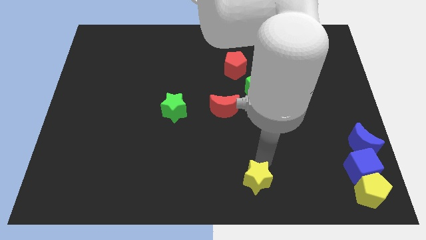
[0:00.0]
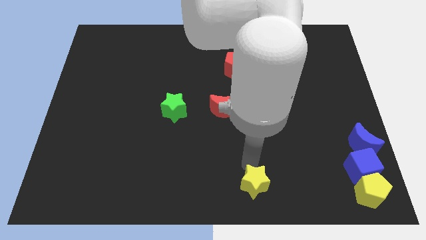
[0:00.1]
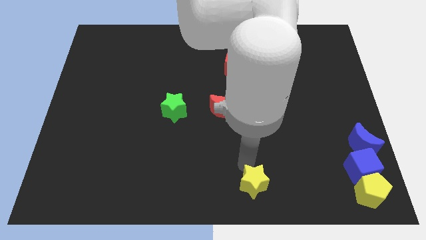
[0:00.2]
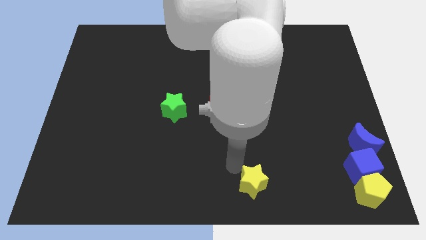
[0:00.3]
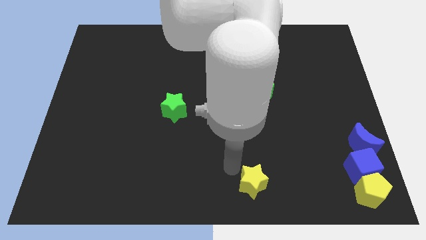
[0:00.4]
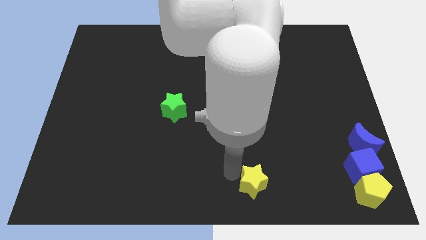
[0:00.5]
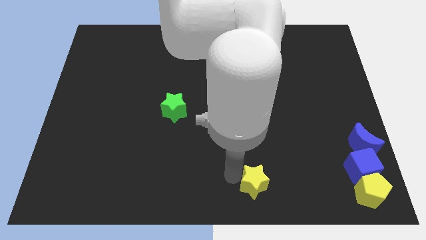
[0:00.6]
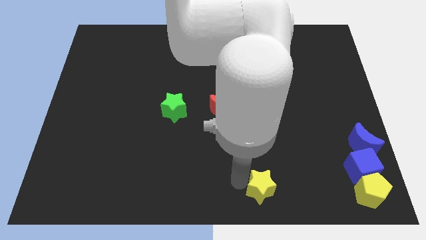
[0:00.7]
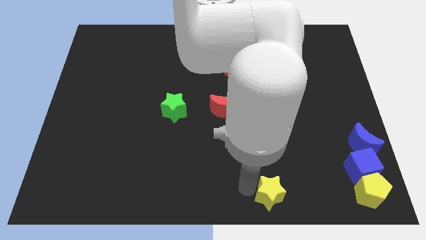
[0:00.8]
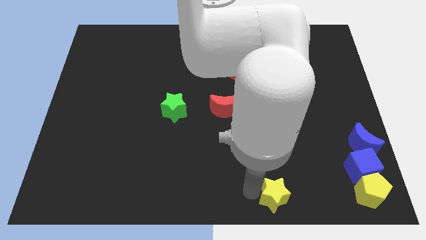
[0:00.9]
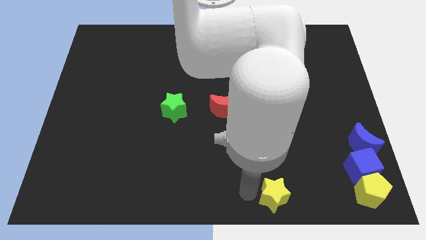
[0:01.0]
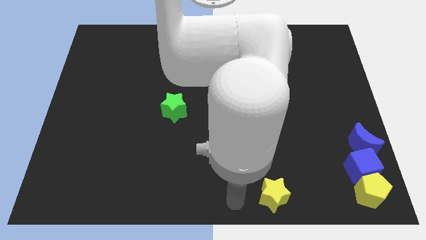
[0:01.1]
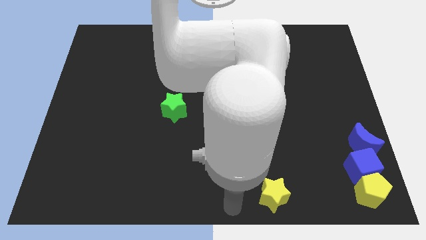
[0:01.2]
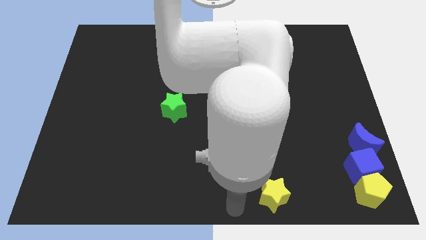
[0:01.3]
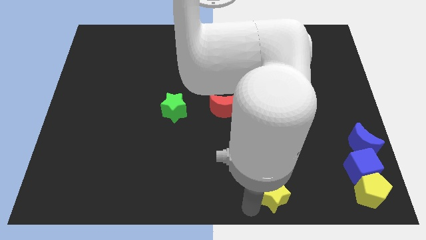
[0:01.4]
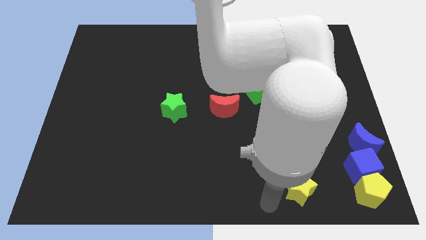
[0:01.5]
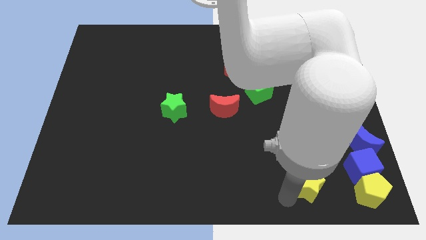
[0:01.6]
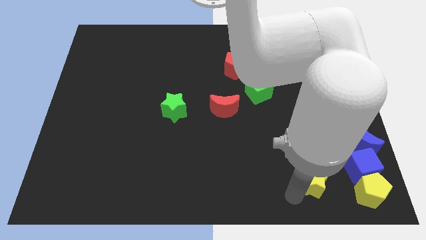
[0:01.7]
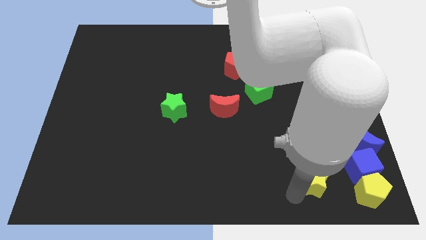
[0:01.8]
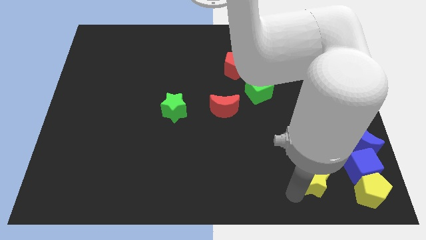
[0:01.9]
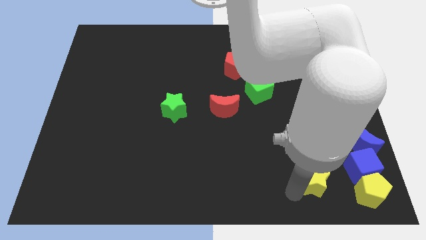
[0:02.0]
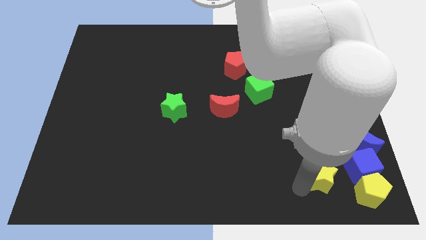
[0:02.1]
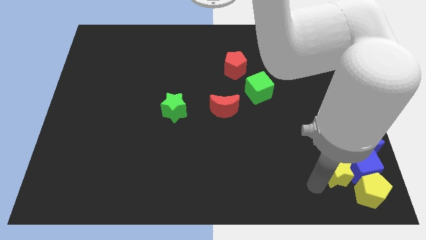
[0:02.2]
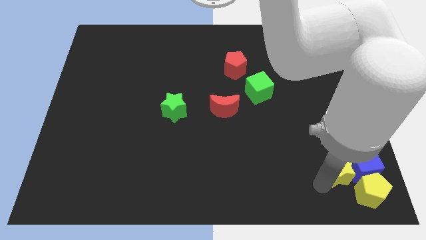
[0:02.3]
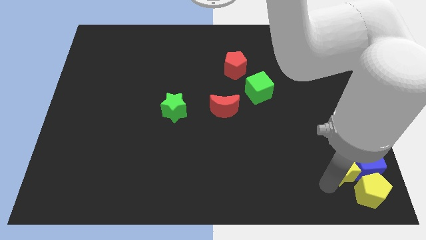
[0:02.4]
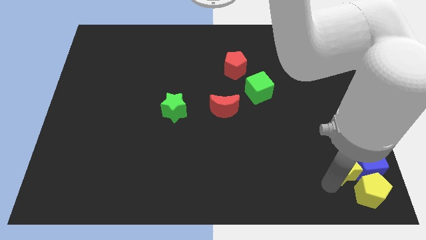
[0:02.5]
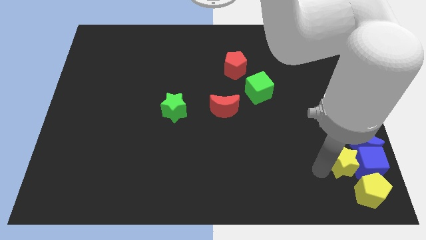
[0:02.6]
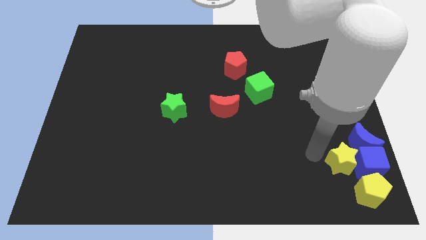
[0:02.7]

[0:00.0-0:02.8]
place the yellow star left to the blue cube

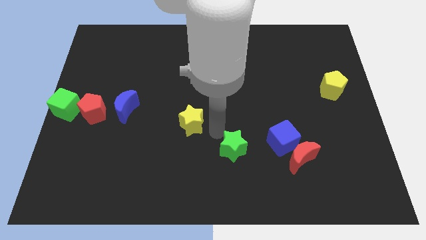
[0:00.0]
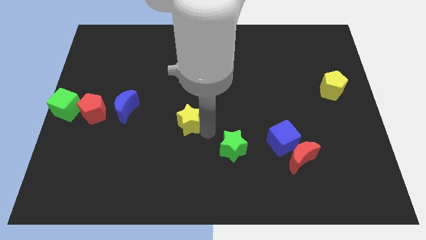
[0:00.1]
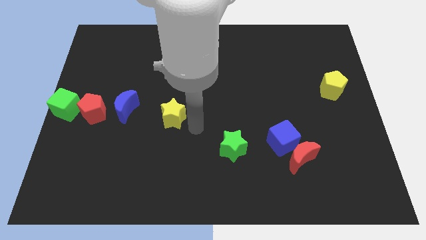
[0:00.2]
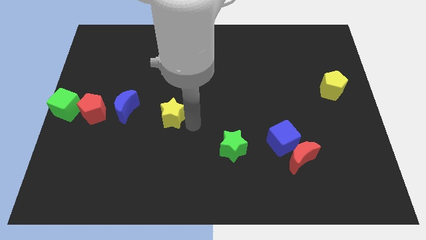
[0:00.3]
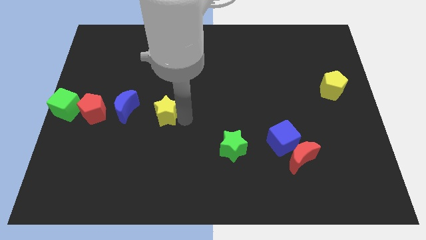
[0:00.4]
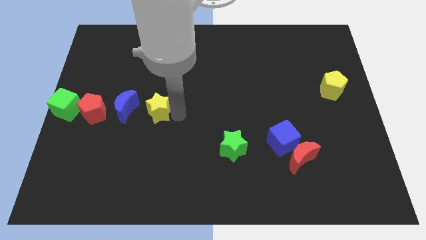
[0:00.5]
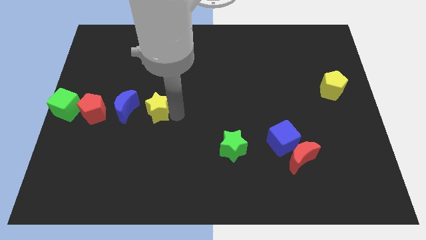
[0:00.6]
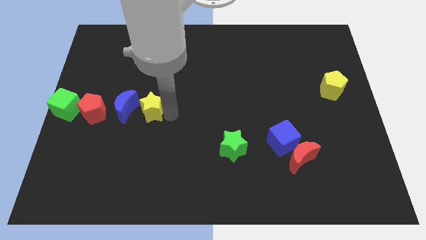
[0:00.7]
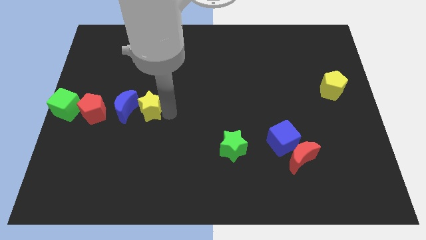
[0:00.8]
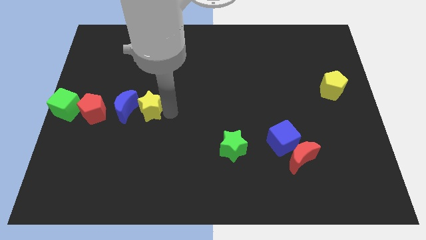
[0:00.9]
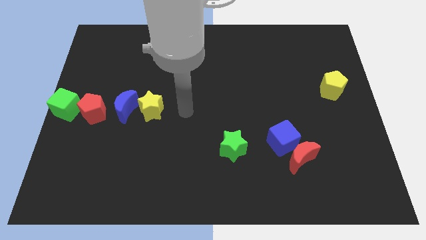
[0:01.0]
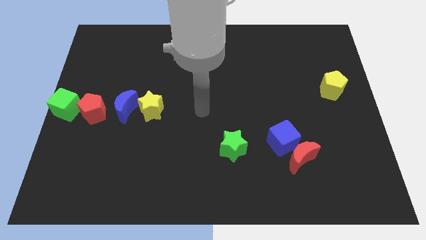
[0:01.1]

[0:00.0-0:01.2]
move the yellow star right to the blue moon

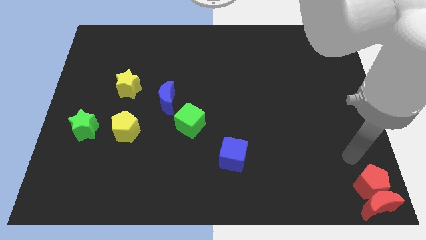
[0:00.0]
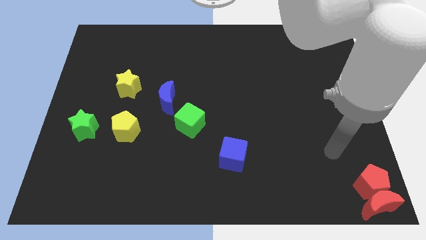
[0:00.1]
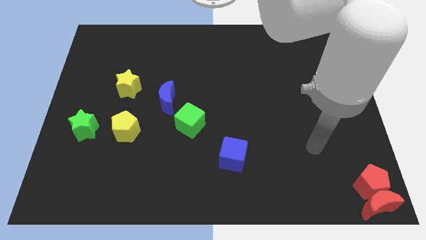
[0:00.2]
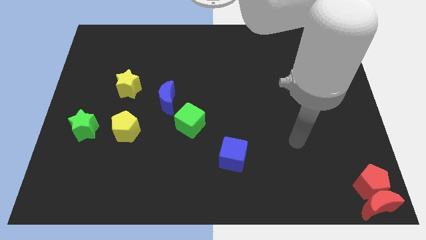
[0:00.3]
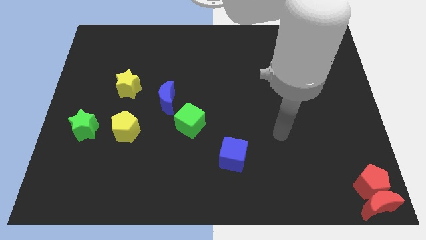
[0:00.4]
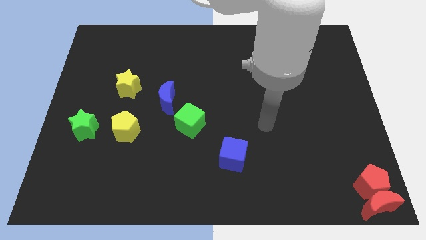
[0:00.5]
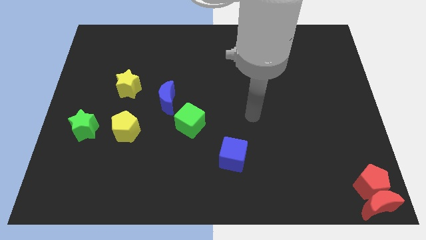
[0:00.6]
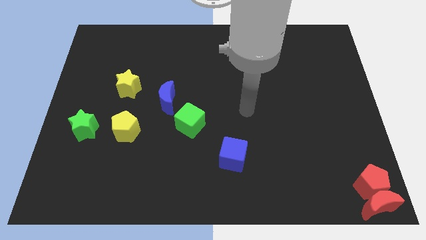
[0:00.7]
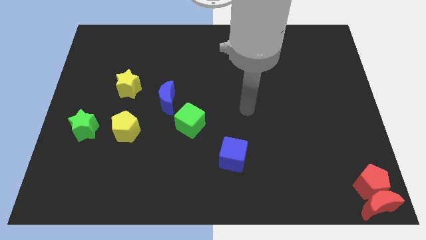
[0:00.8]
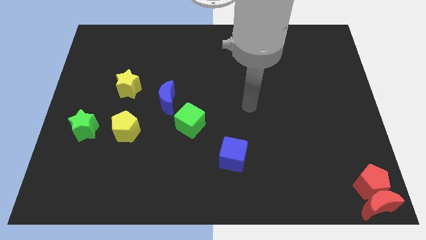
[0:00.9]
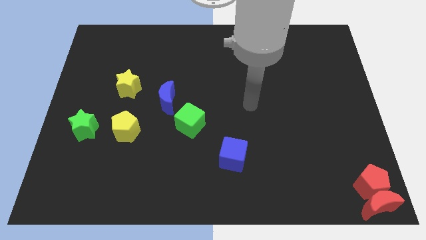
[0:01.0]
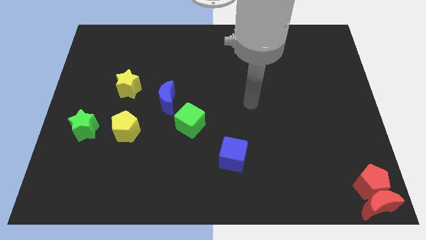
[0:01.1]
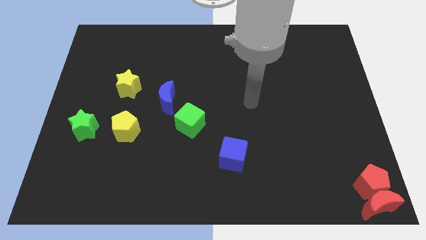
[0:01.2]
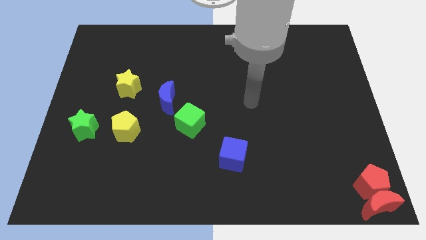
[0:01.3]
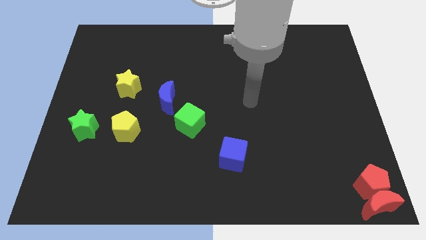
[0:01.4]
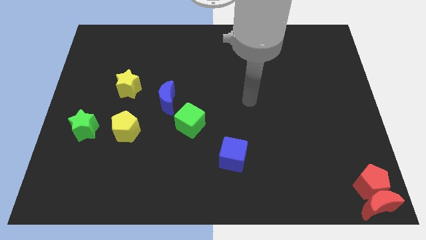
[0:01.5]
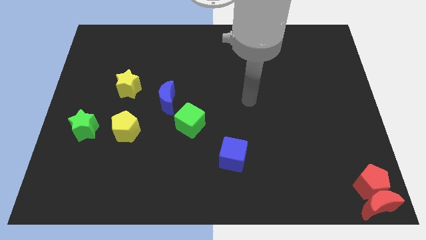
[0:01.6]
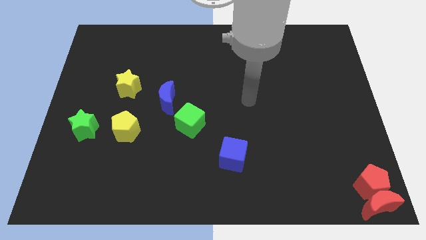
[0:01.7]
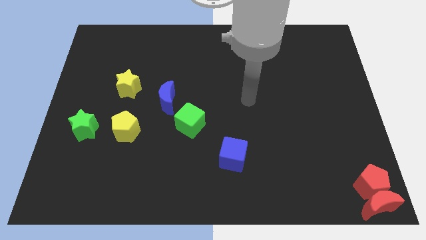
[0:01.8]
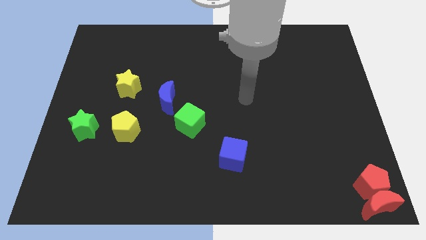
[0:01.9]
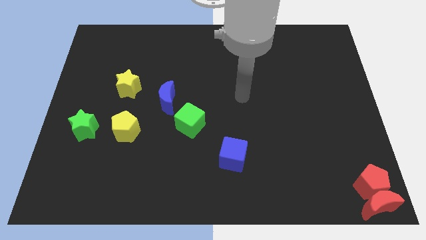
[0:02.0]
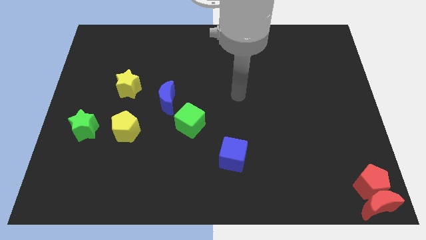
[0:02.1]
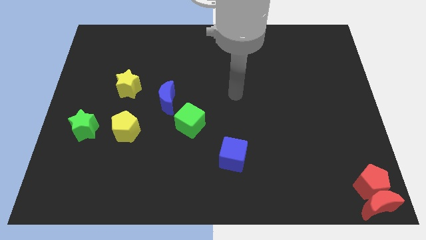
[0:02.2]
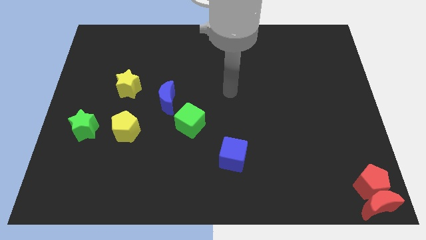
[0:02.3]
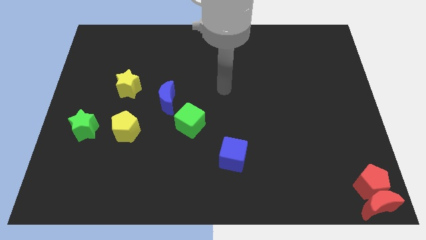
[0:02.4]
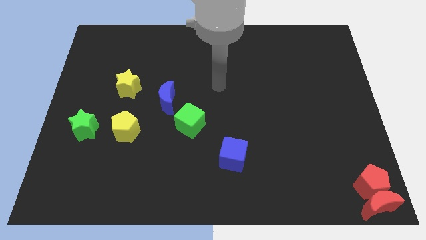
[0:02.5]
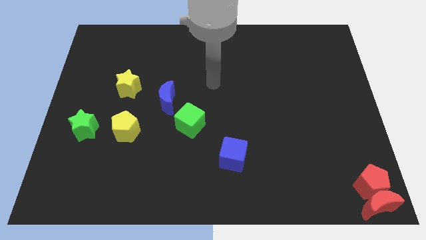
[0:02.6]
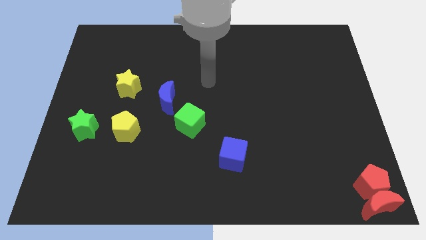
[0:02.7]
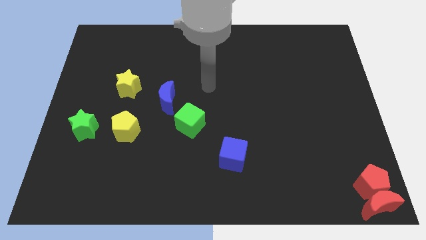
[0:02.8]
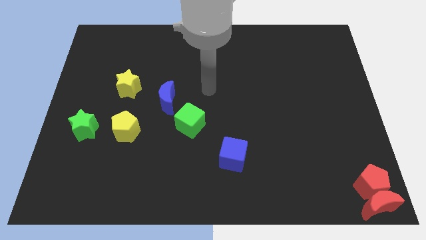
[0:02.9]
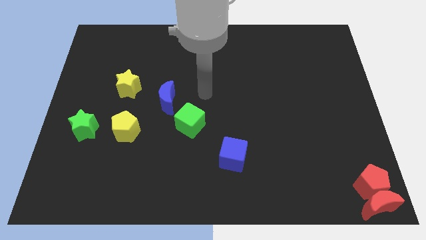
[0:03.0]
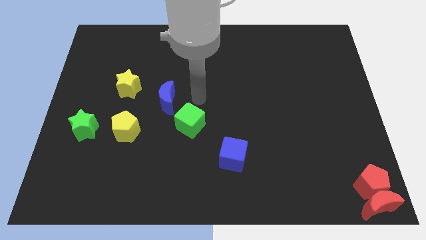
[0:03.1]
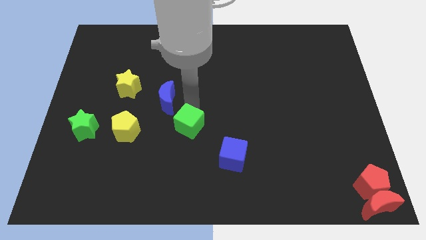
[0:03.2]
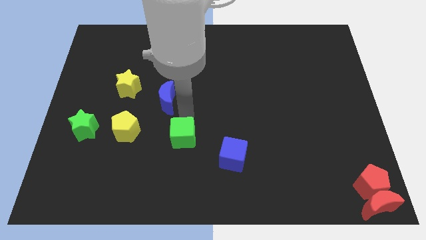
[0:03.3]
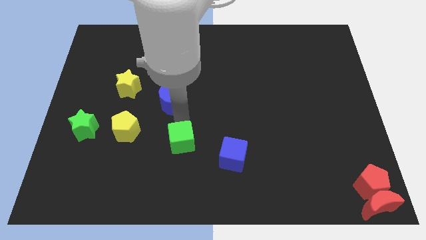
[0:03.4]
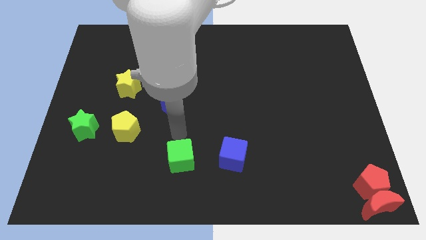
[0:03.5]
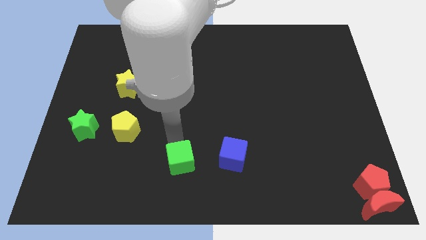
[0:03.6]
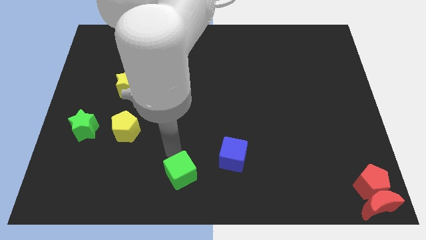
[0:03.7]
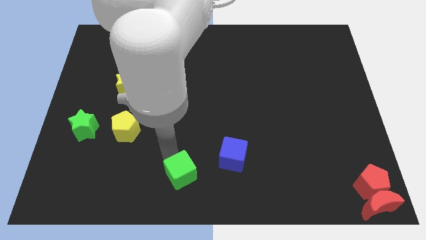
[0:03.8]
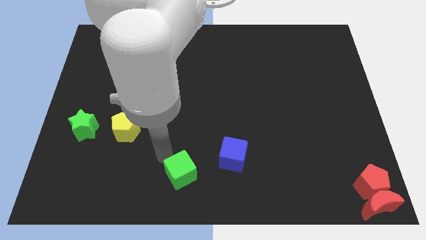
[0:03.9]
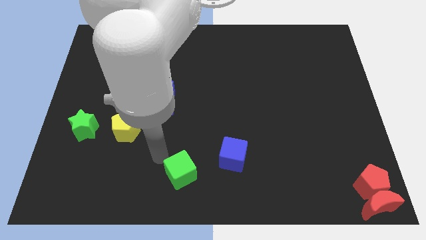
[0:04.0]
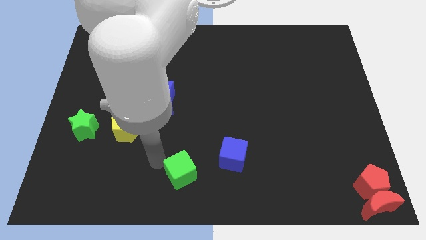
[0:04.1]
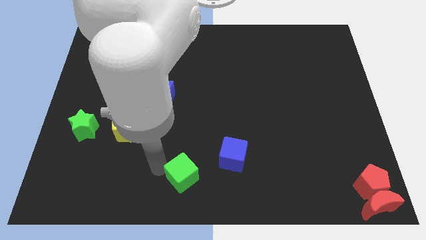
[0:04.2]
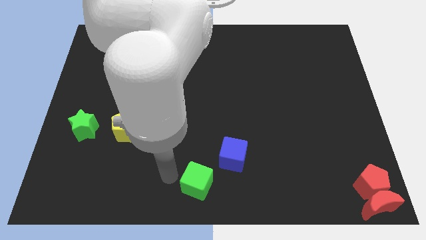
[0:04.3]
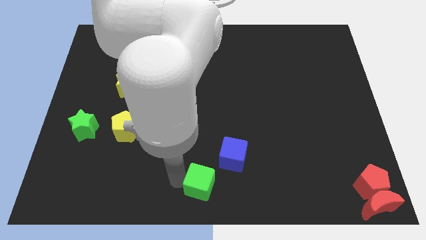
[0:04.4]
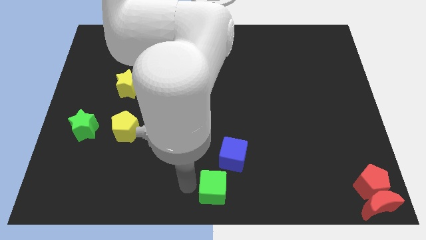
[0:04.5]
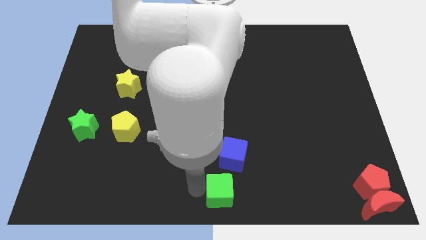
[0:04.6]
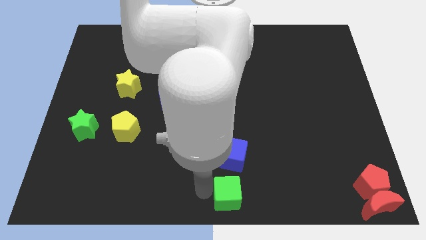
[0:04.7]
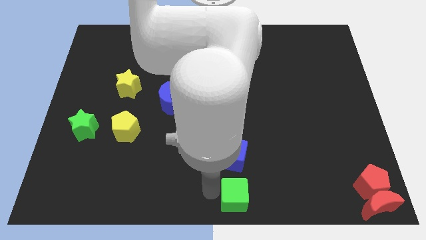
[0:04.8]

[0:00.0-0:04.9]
move the green cube to the bottom center of the board
